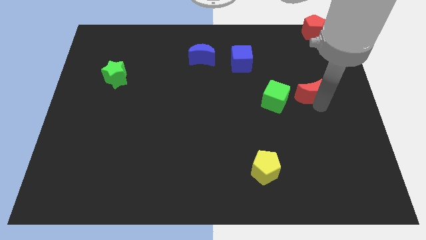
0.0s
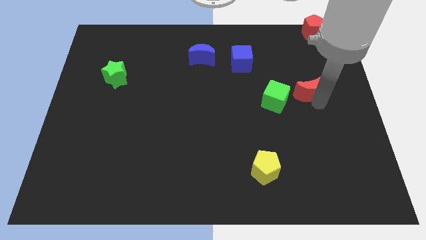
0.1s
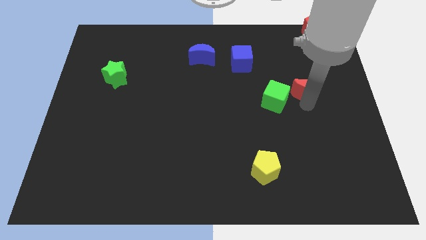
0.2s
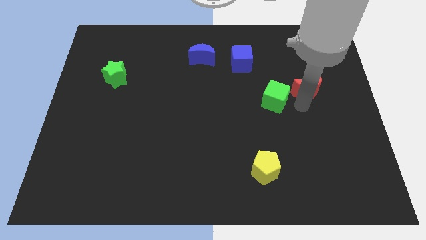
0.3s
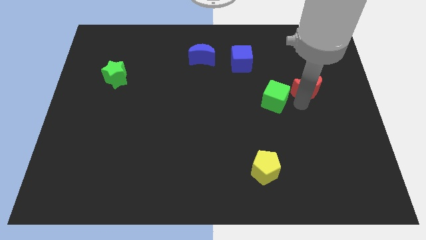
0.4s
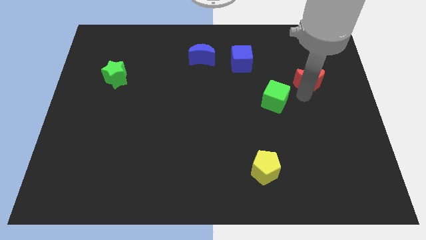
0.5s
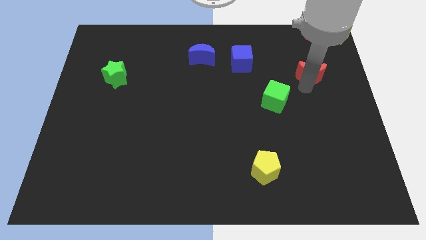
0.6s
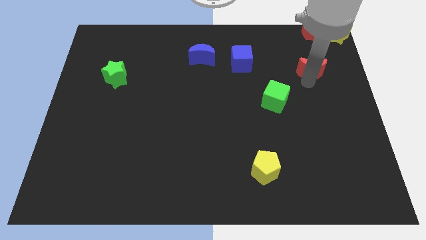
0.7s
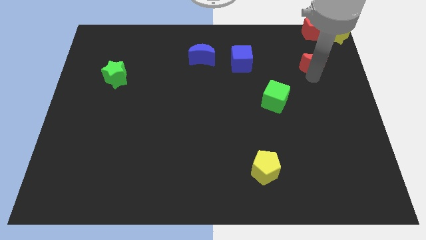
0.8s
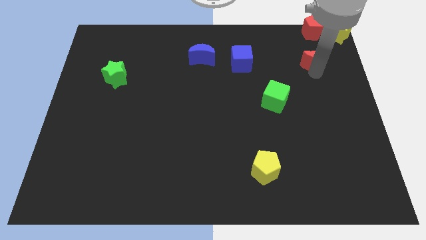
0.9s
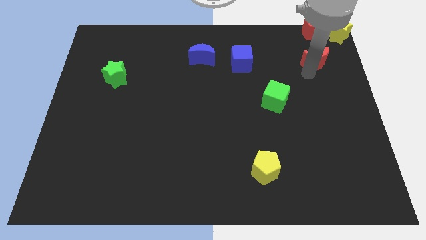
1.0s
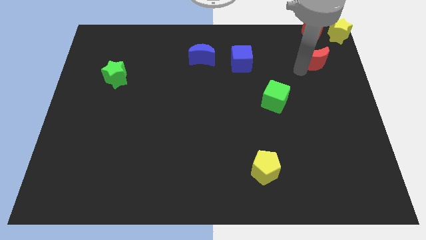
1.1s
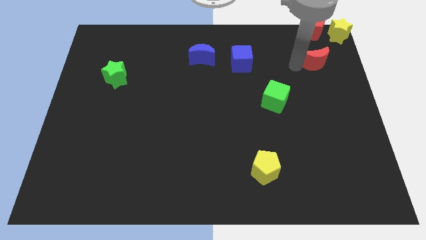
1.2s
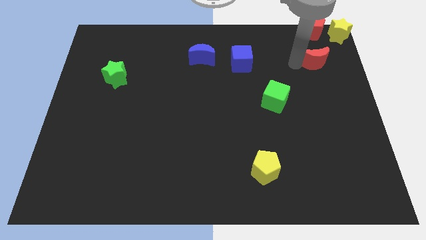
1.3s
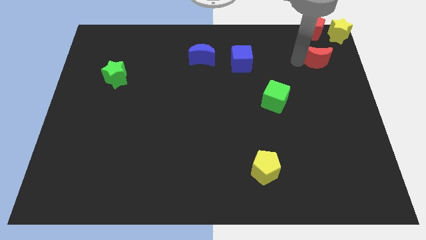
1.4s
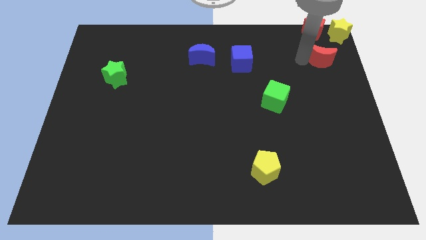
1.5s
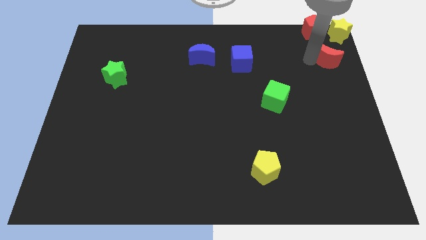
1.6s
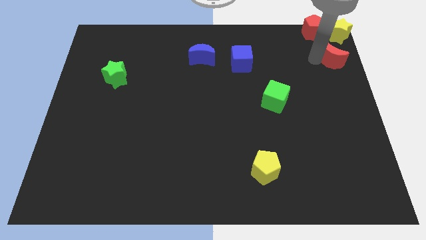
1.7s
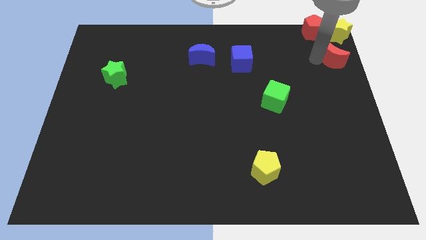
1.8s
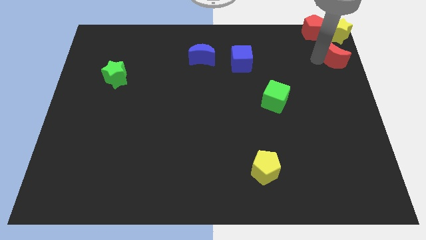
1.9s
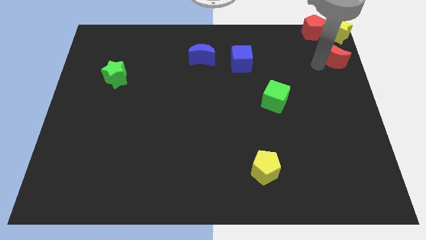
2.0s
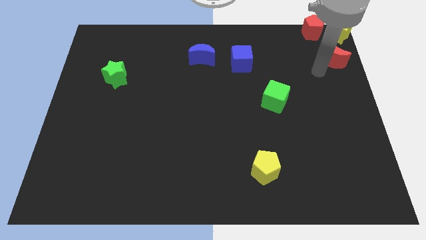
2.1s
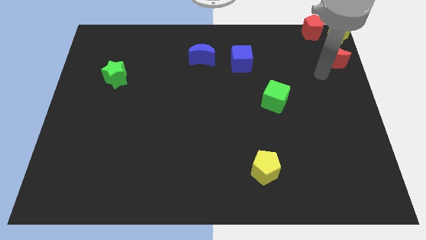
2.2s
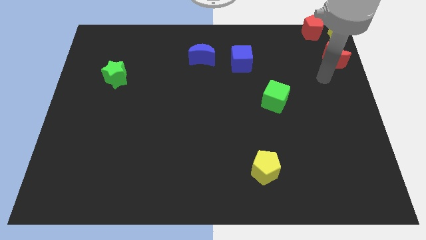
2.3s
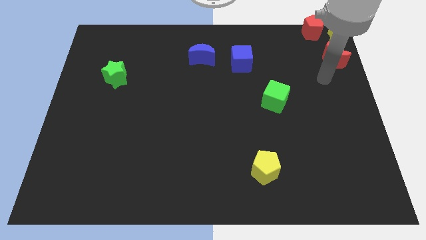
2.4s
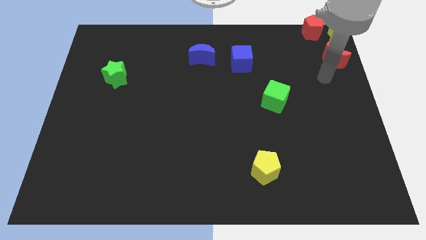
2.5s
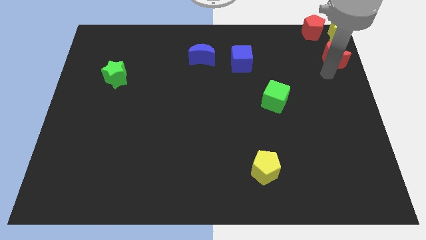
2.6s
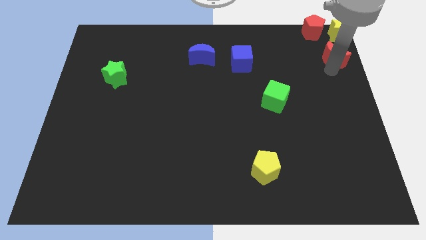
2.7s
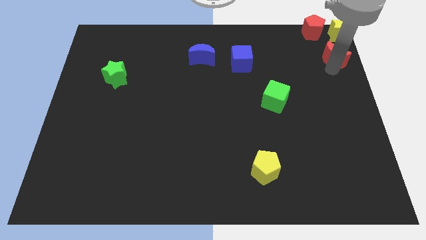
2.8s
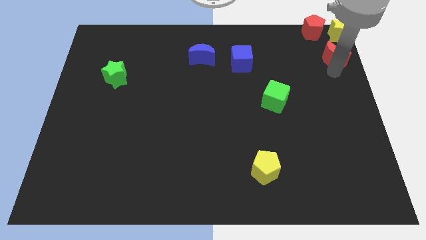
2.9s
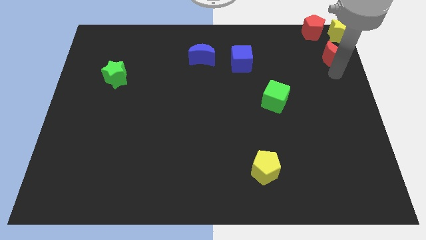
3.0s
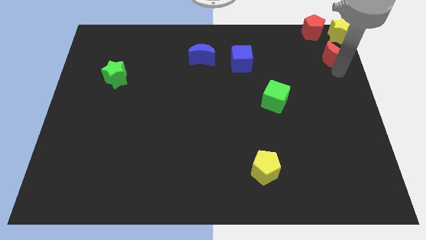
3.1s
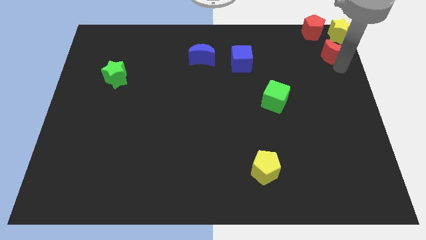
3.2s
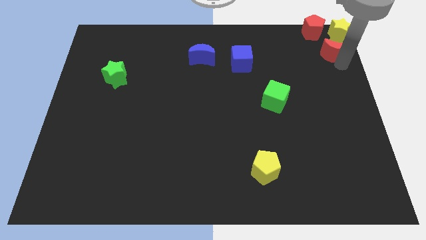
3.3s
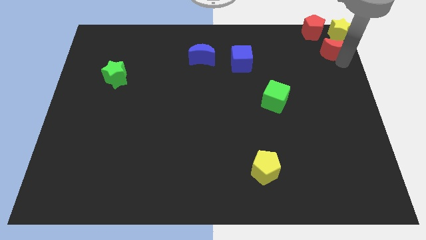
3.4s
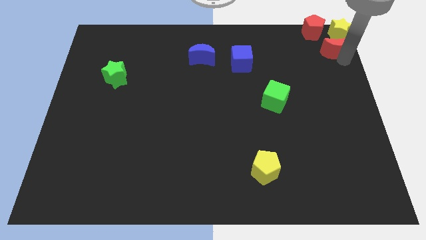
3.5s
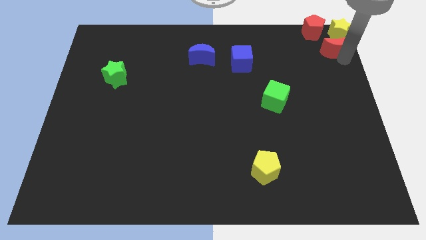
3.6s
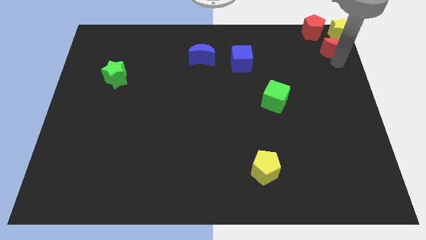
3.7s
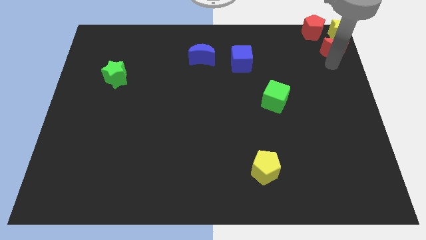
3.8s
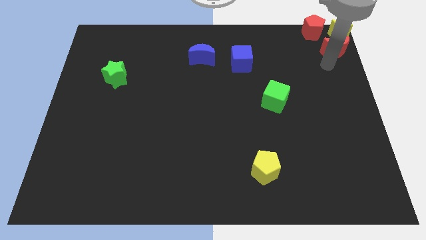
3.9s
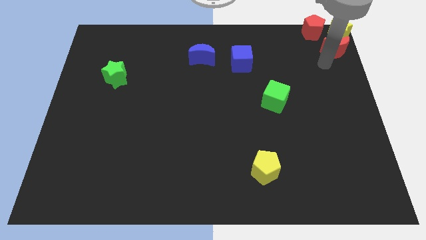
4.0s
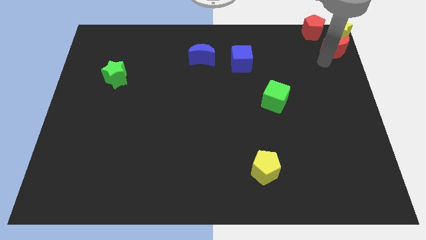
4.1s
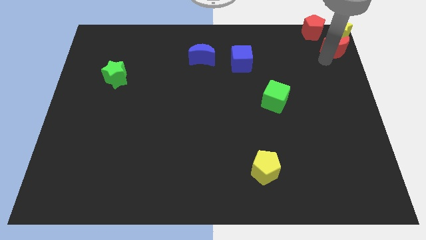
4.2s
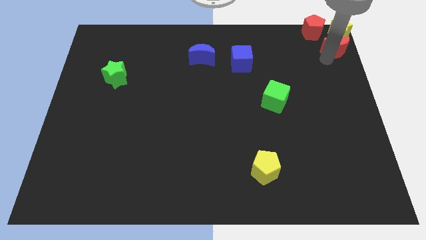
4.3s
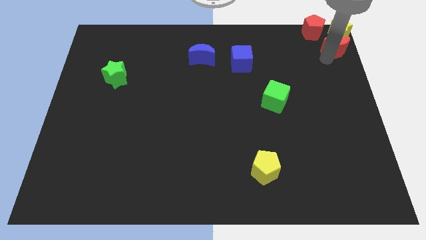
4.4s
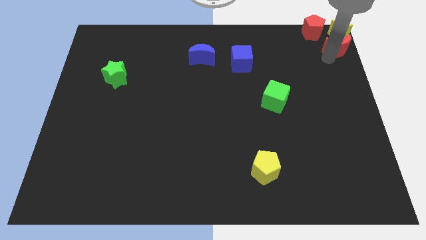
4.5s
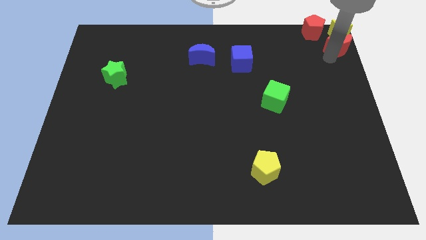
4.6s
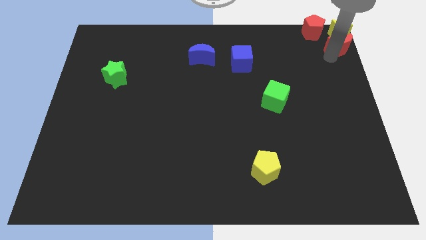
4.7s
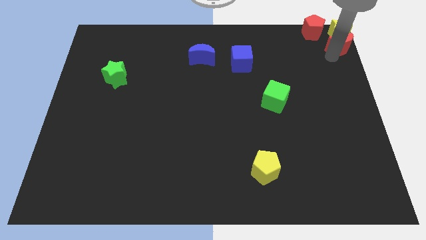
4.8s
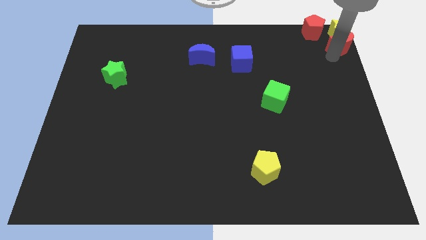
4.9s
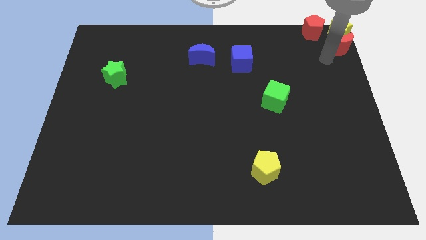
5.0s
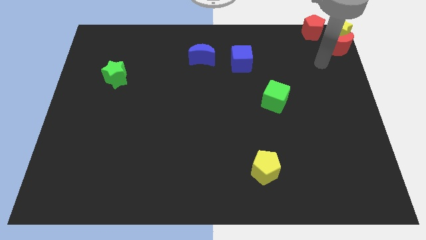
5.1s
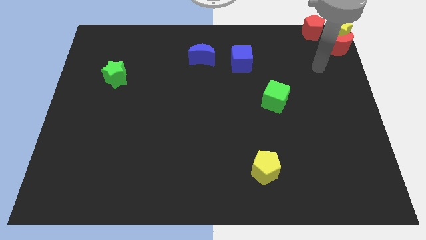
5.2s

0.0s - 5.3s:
push the red crescent to the bottom side of the yellow star

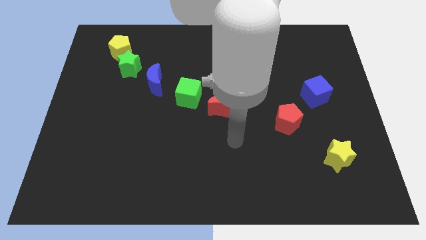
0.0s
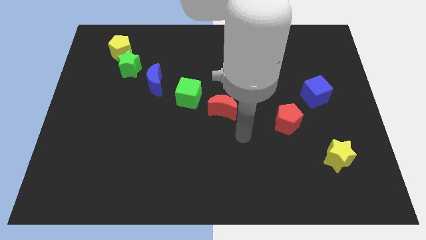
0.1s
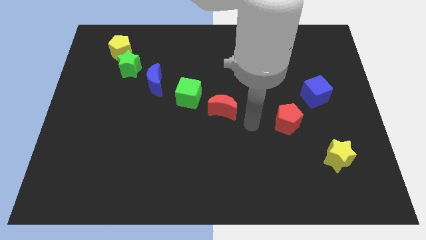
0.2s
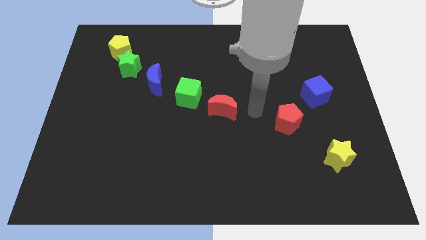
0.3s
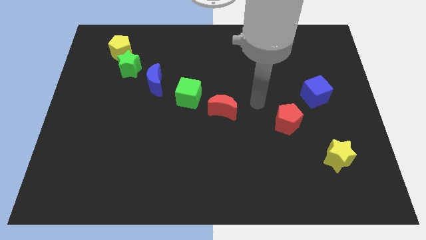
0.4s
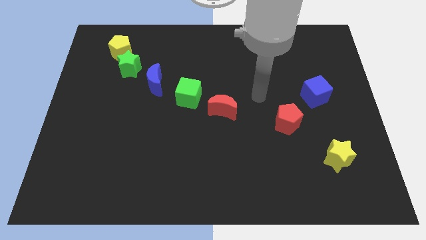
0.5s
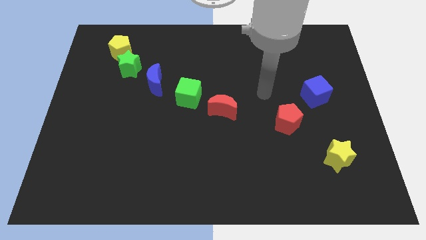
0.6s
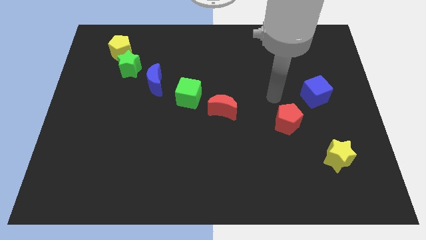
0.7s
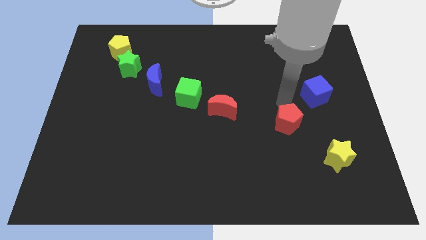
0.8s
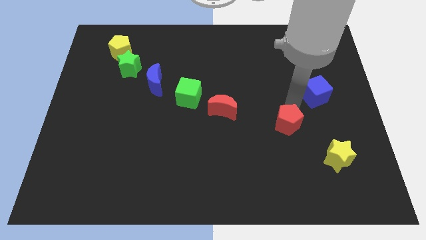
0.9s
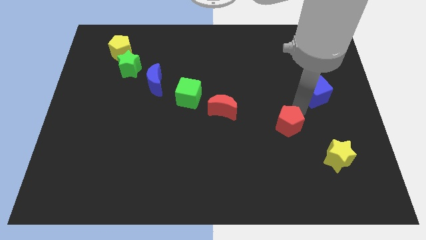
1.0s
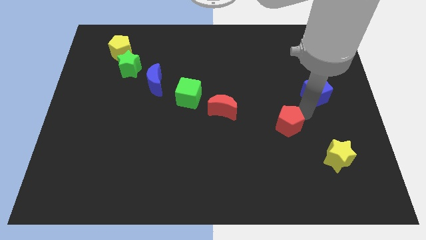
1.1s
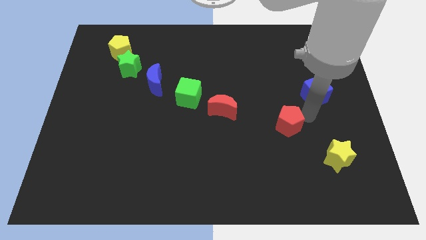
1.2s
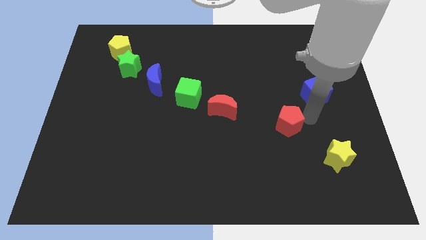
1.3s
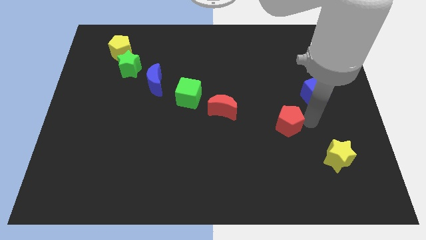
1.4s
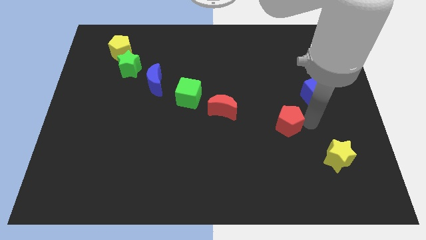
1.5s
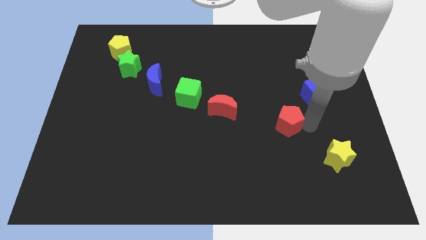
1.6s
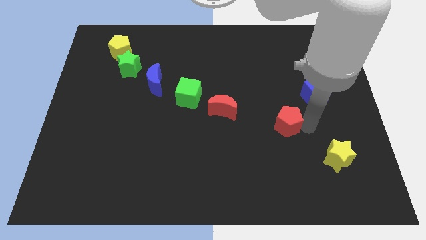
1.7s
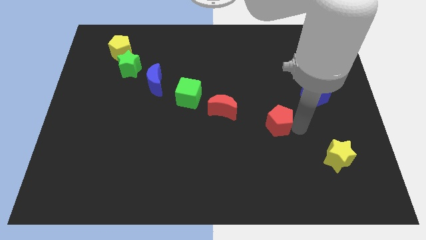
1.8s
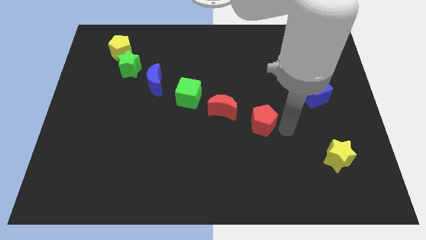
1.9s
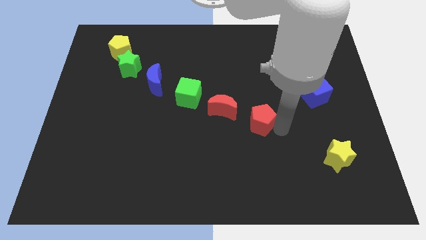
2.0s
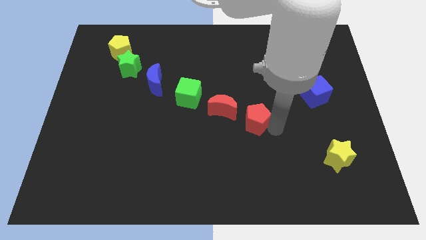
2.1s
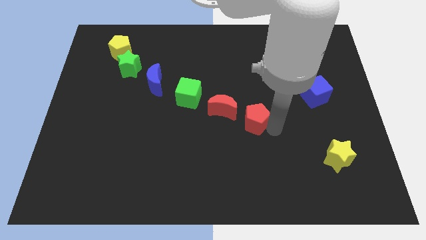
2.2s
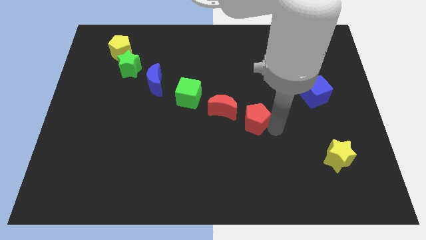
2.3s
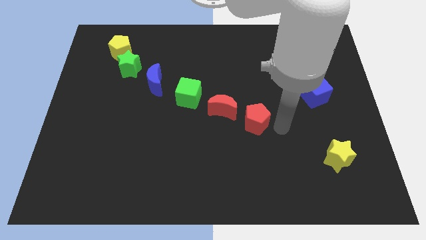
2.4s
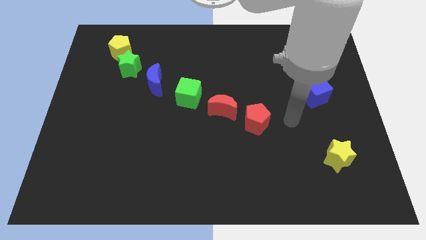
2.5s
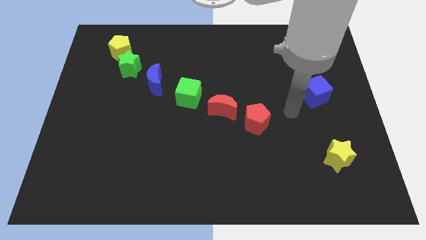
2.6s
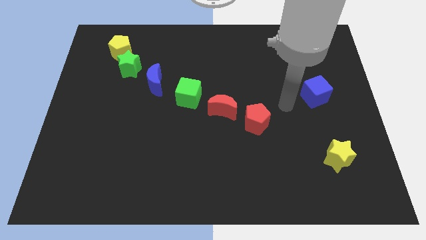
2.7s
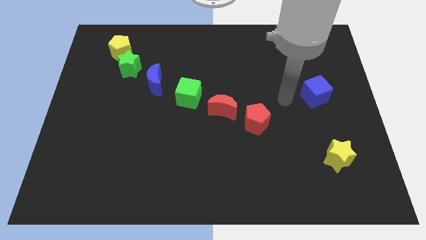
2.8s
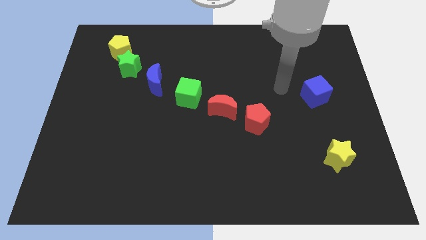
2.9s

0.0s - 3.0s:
place the red pentagon to the right of the red moon

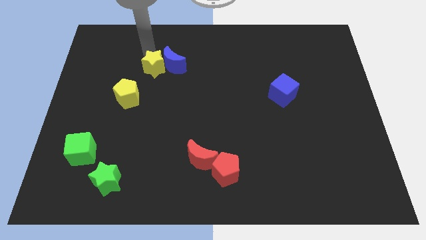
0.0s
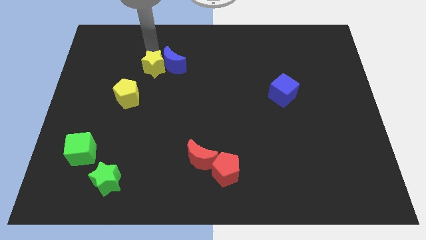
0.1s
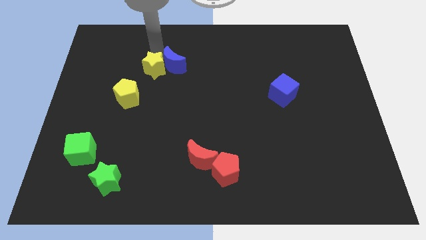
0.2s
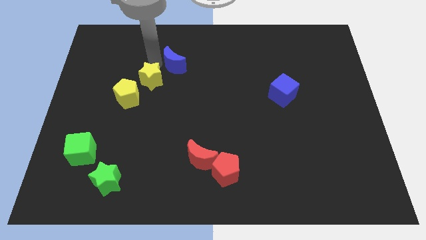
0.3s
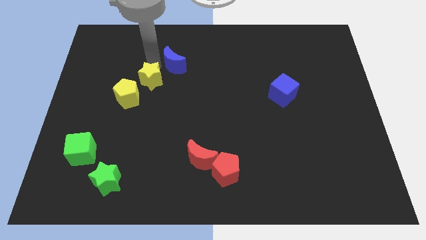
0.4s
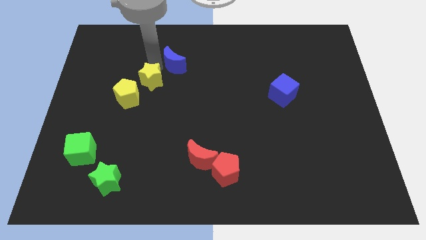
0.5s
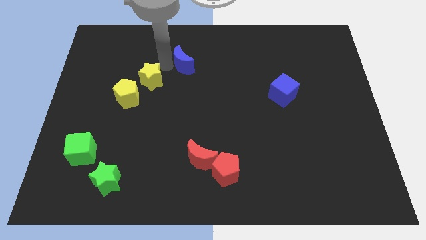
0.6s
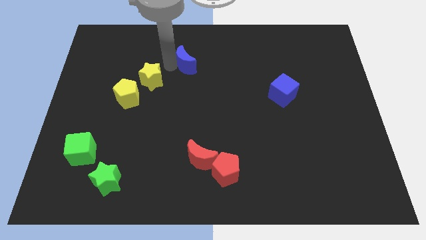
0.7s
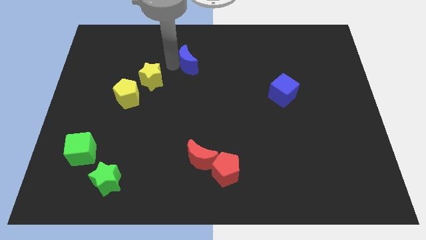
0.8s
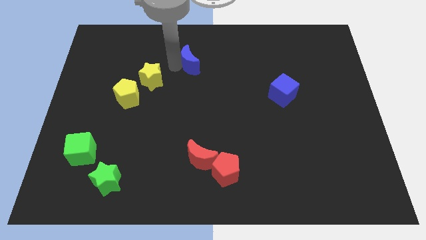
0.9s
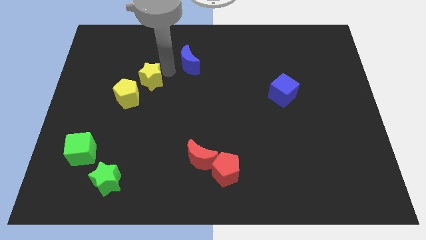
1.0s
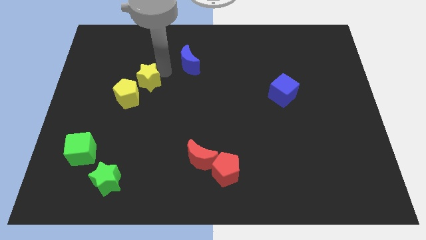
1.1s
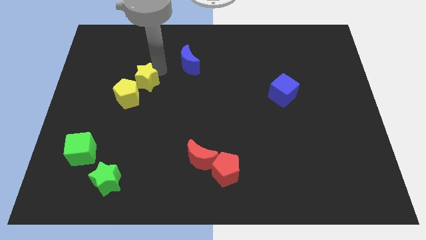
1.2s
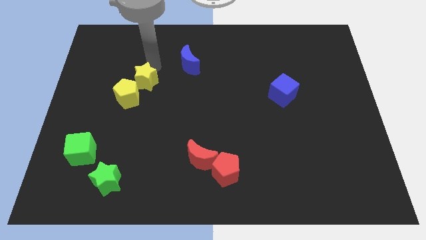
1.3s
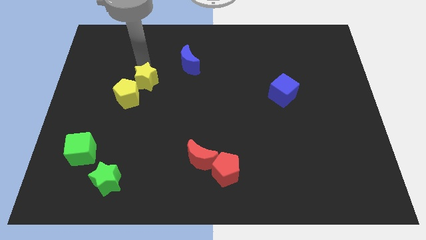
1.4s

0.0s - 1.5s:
move the blue moon far from the yellow star
